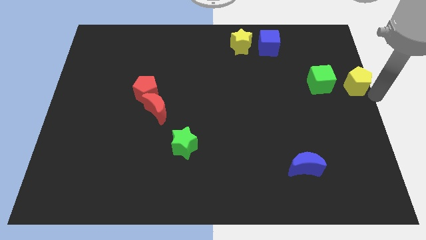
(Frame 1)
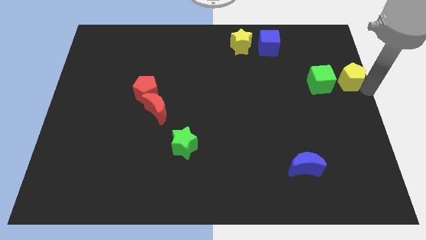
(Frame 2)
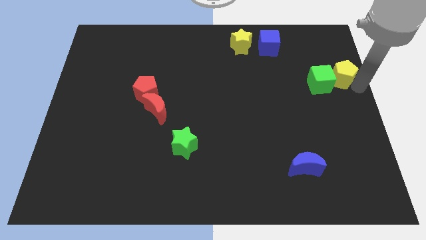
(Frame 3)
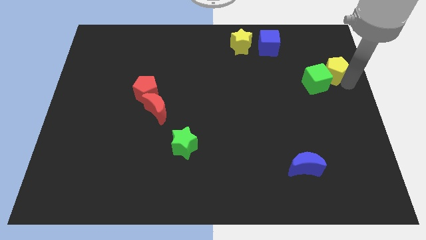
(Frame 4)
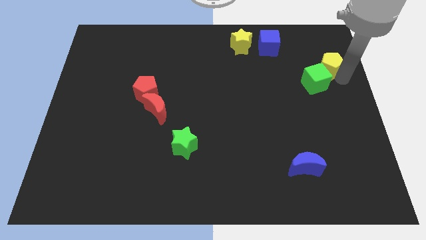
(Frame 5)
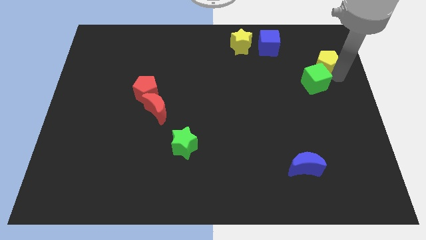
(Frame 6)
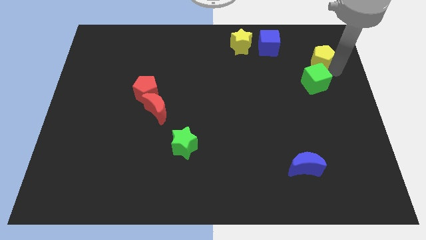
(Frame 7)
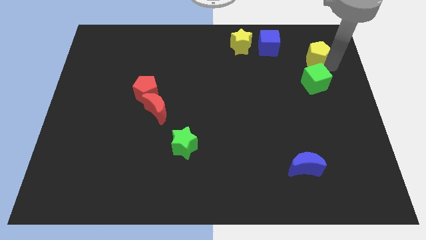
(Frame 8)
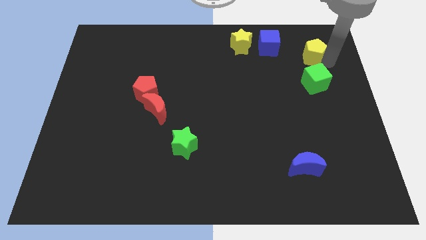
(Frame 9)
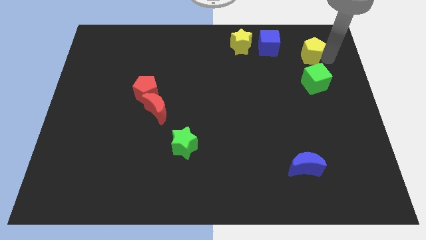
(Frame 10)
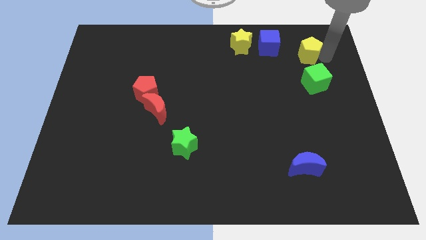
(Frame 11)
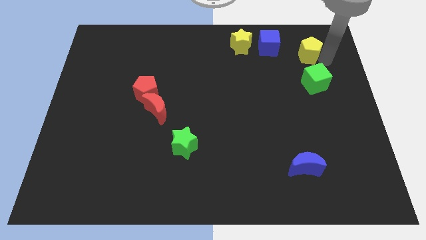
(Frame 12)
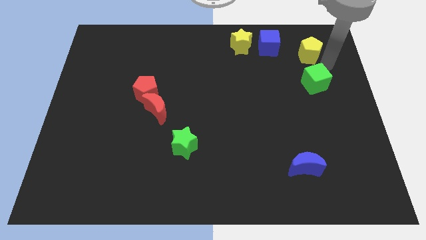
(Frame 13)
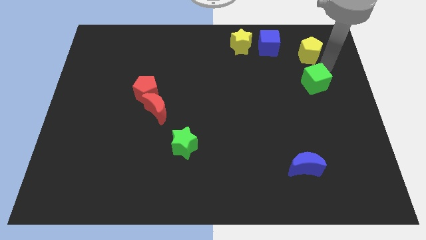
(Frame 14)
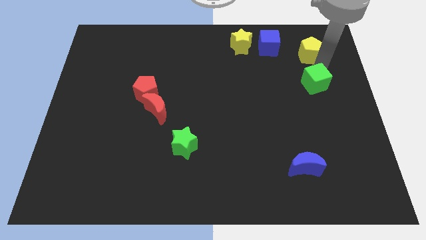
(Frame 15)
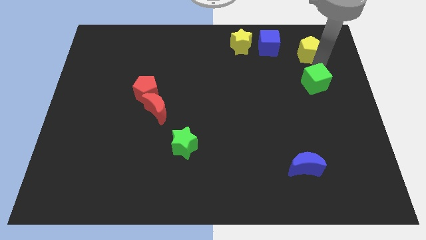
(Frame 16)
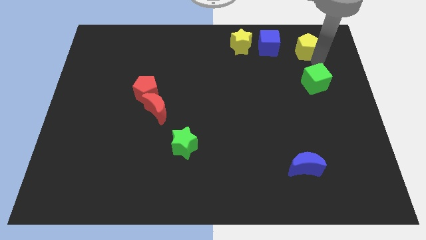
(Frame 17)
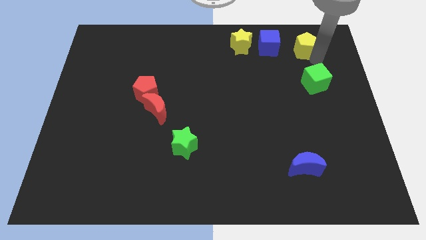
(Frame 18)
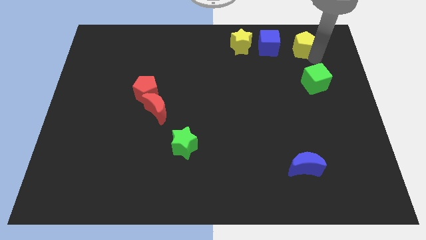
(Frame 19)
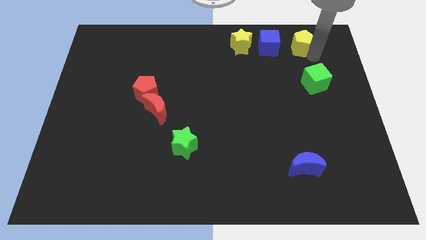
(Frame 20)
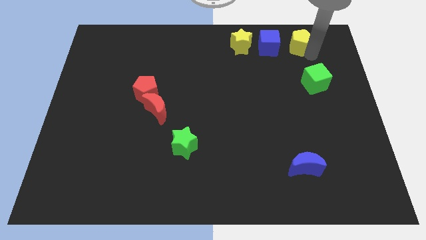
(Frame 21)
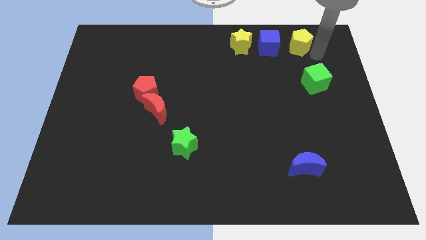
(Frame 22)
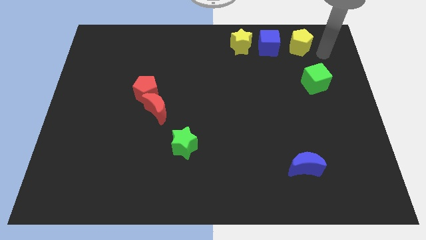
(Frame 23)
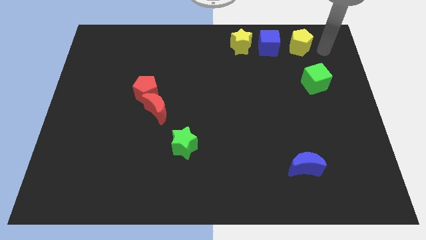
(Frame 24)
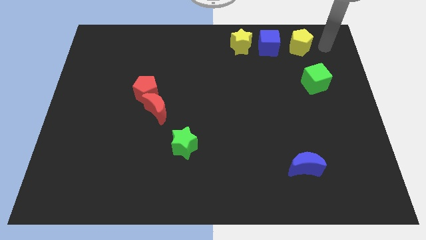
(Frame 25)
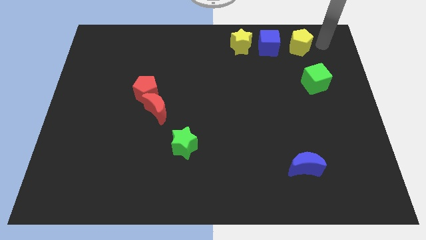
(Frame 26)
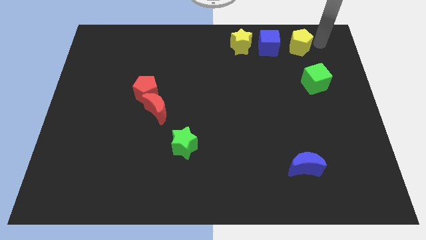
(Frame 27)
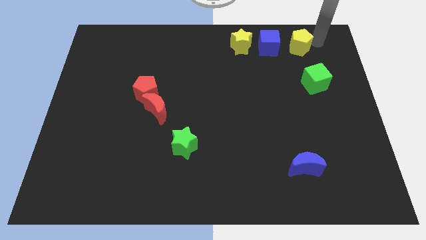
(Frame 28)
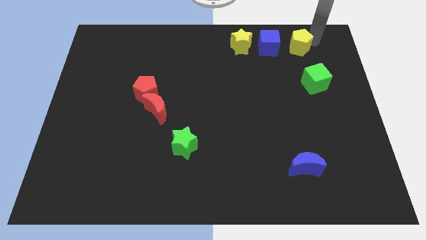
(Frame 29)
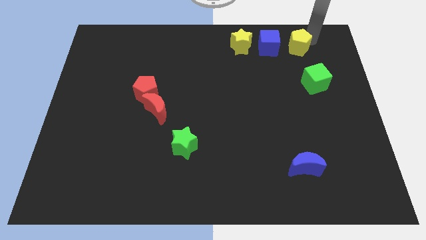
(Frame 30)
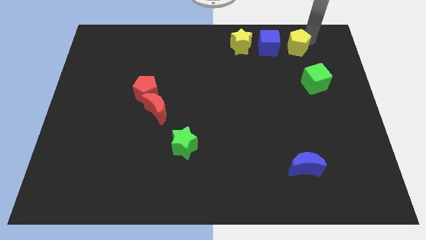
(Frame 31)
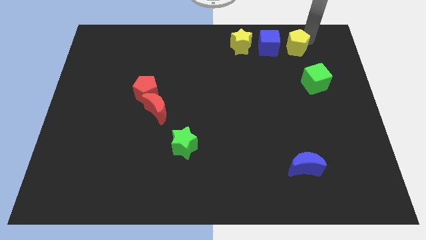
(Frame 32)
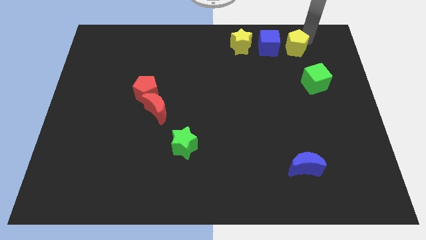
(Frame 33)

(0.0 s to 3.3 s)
place the yellow pentagon diagonally top left to the green cube

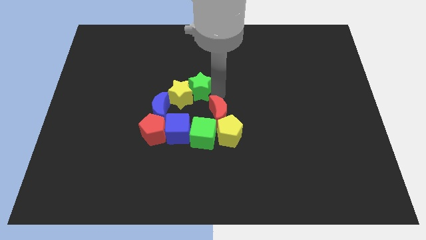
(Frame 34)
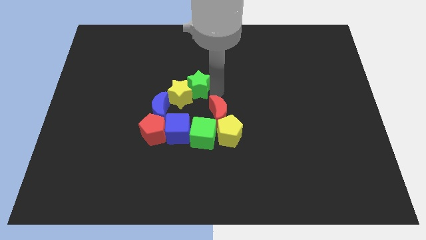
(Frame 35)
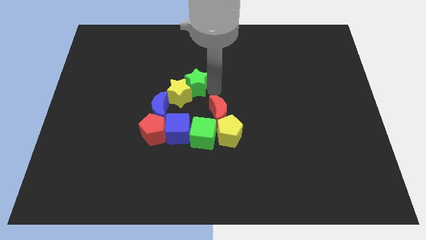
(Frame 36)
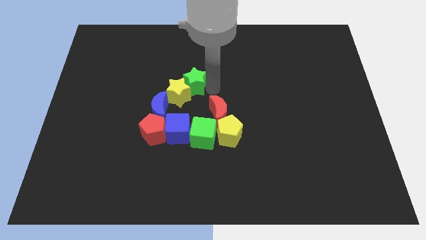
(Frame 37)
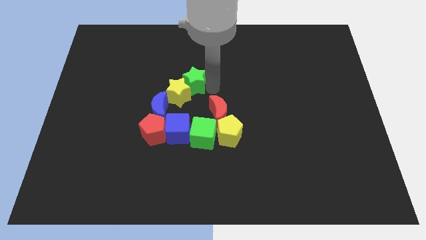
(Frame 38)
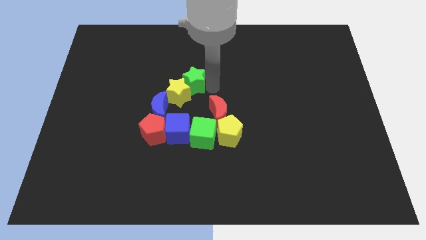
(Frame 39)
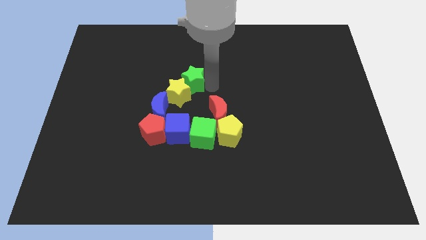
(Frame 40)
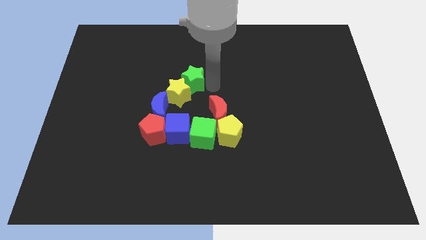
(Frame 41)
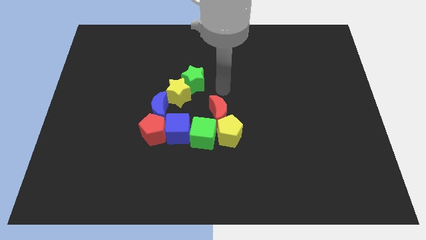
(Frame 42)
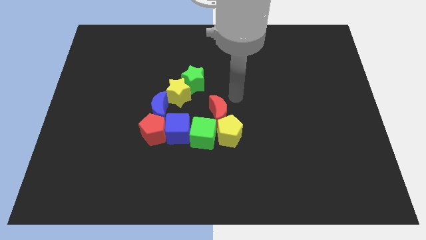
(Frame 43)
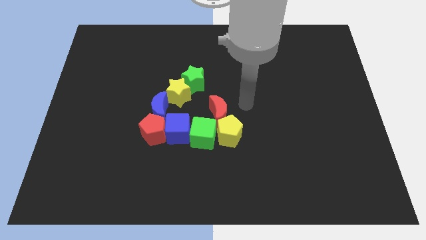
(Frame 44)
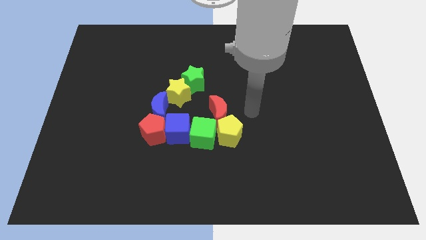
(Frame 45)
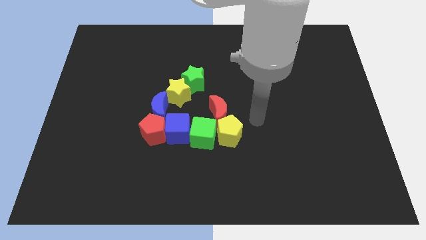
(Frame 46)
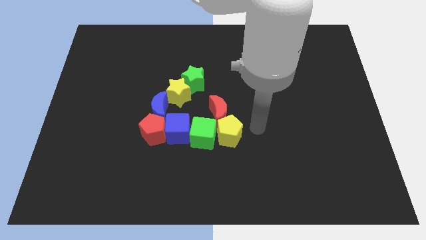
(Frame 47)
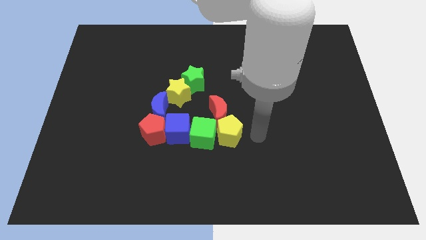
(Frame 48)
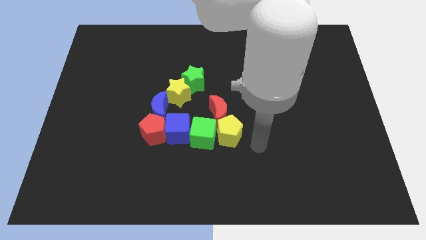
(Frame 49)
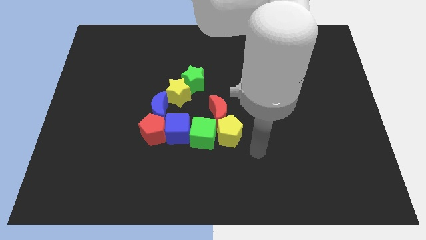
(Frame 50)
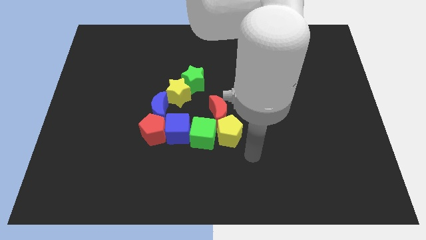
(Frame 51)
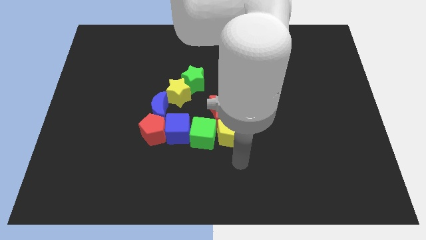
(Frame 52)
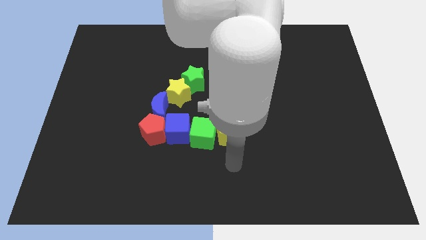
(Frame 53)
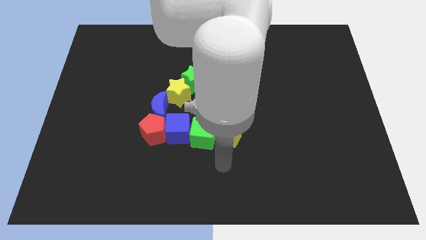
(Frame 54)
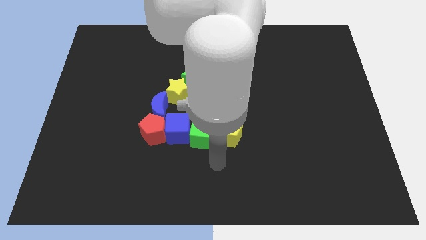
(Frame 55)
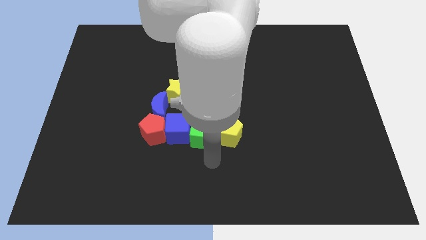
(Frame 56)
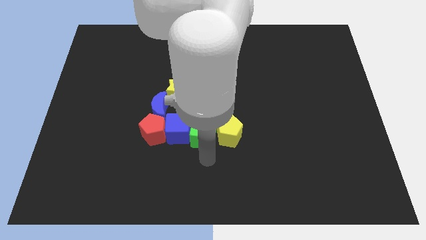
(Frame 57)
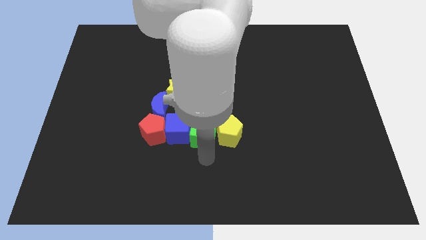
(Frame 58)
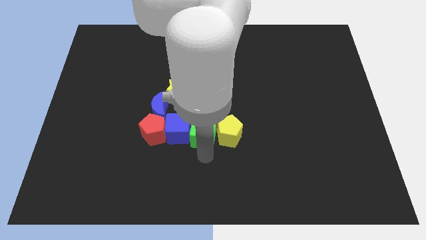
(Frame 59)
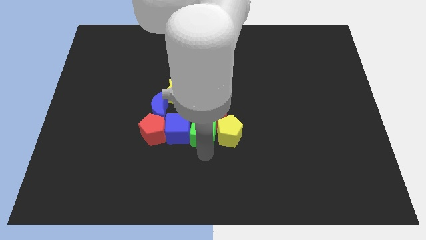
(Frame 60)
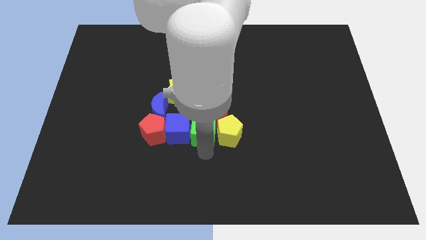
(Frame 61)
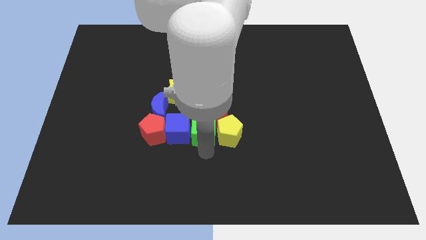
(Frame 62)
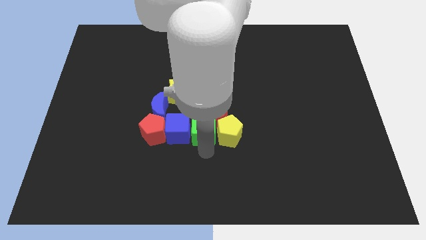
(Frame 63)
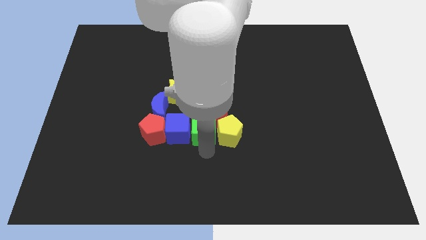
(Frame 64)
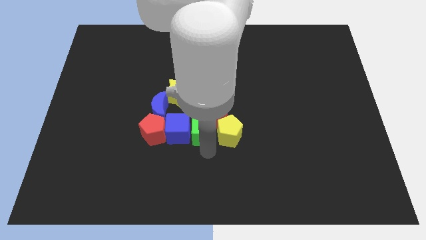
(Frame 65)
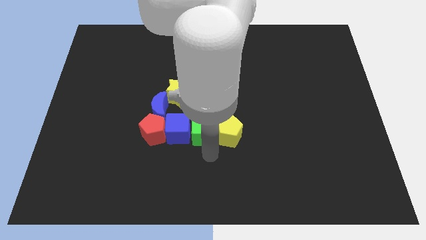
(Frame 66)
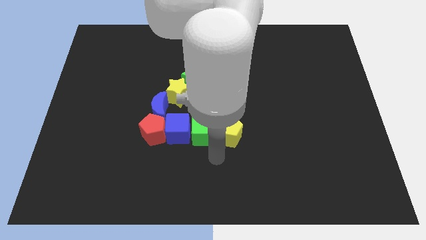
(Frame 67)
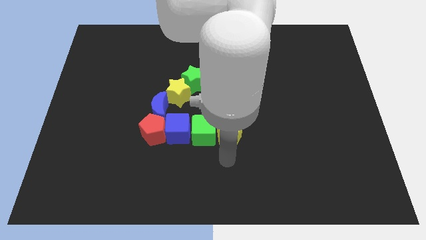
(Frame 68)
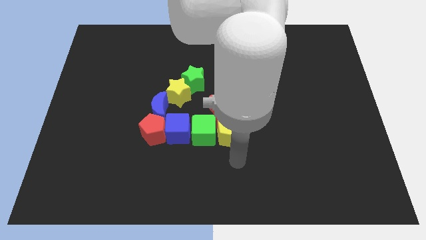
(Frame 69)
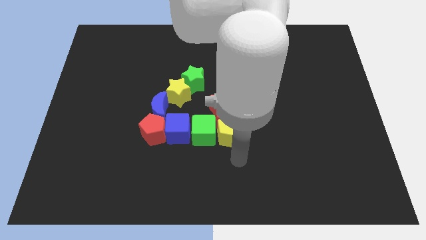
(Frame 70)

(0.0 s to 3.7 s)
slightly move the green cube up

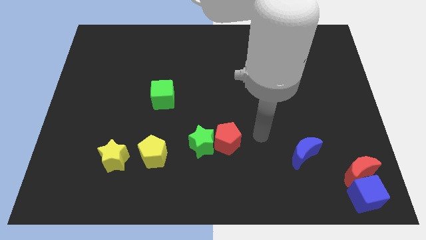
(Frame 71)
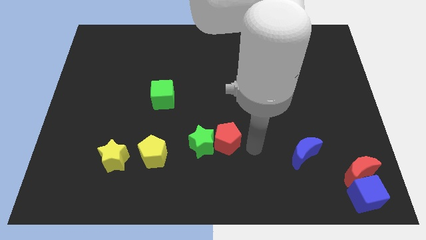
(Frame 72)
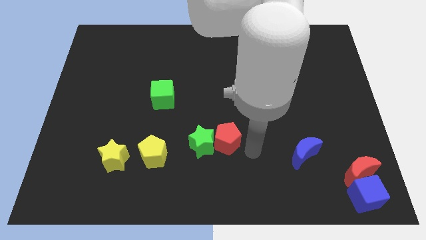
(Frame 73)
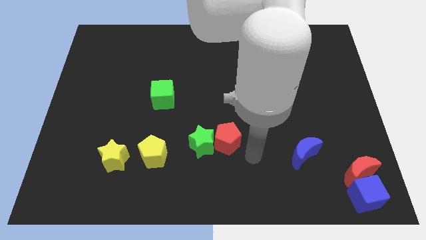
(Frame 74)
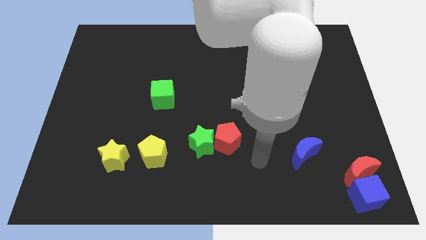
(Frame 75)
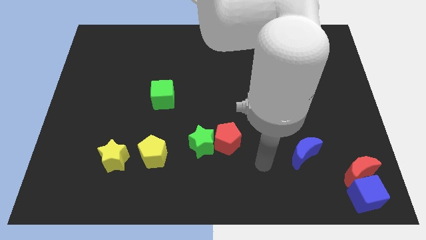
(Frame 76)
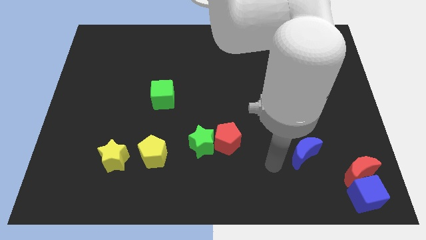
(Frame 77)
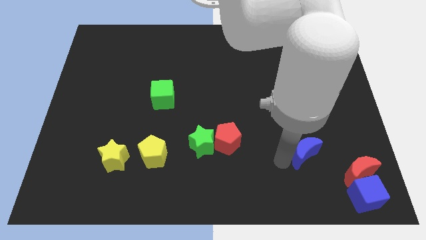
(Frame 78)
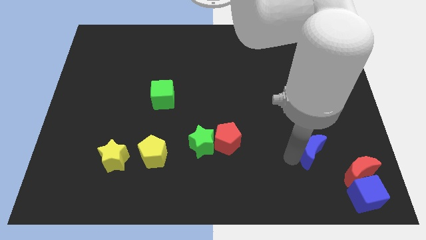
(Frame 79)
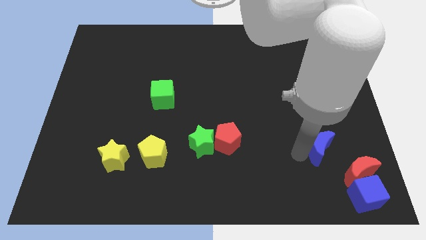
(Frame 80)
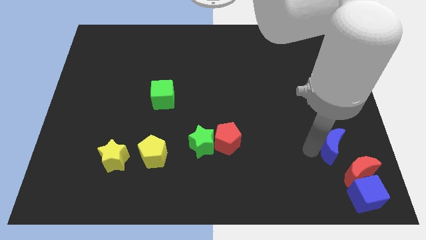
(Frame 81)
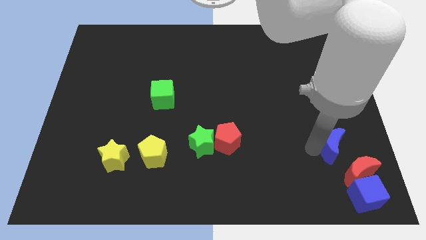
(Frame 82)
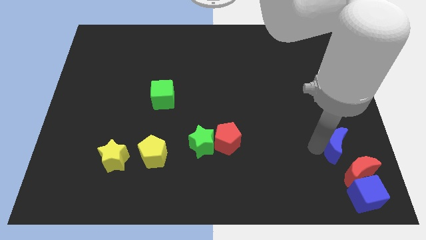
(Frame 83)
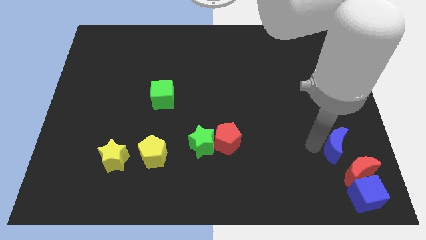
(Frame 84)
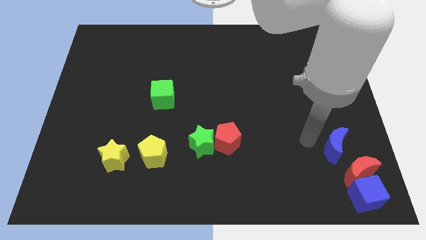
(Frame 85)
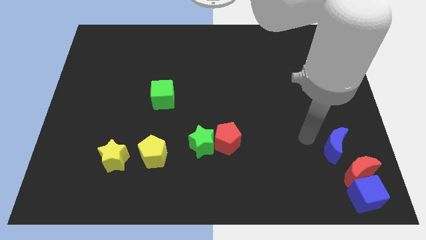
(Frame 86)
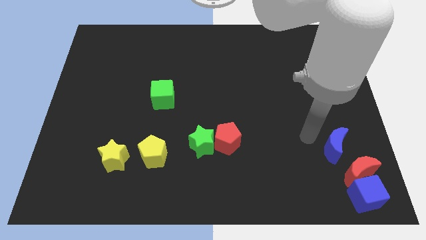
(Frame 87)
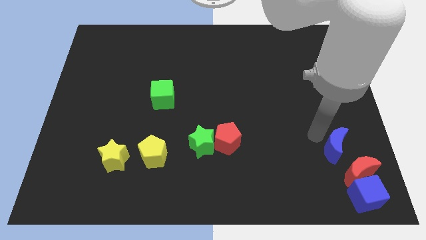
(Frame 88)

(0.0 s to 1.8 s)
push the blue crescent slightly to the right

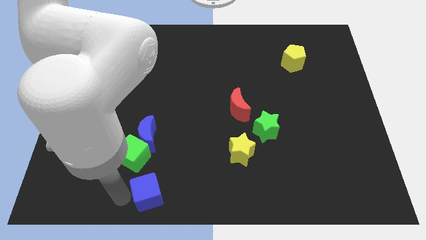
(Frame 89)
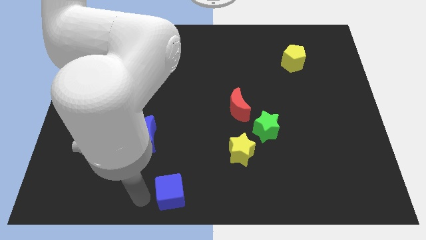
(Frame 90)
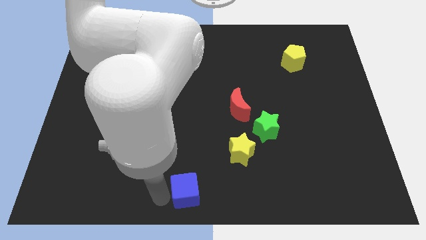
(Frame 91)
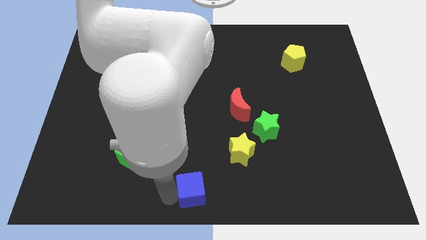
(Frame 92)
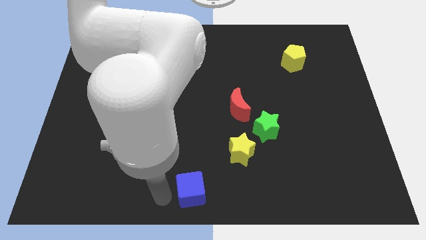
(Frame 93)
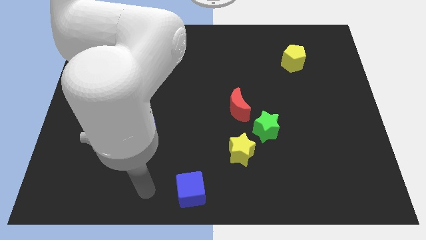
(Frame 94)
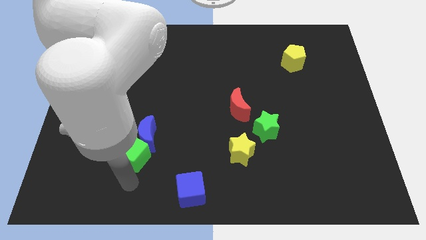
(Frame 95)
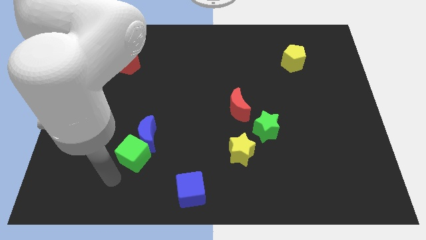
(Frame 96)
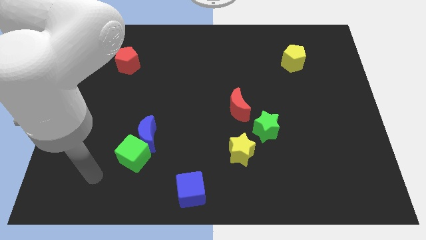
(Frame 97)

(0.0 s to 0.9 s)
move the blue cube diagonally to yellow star
